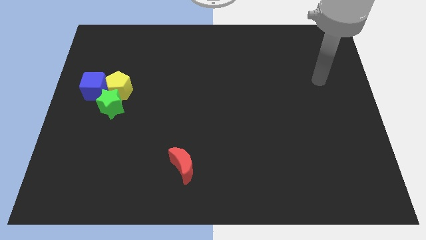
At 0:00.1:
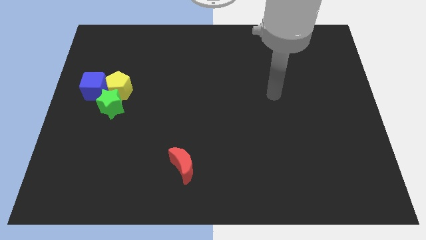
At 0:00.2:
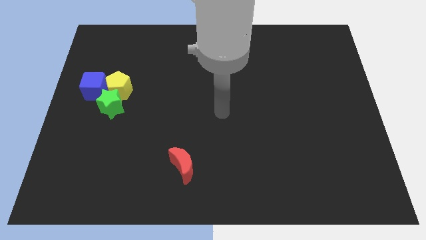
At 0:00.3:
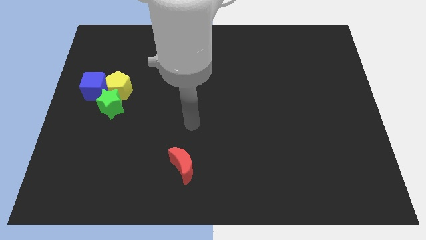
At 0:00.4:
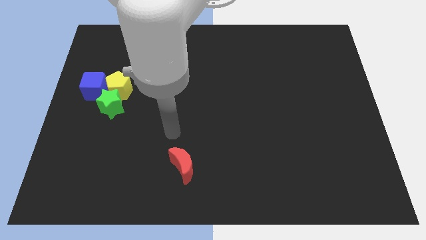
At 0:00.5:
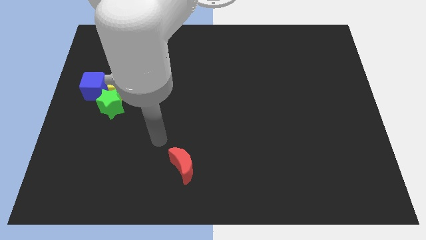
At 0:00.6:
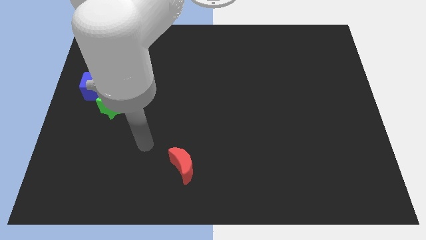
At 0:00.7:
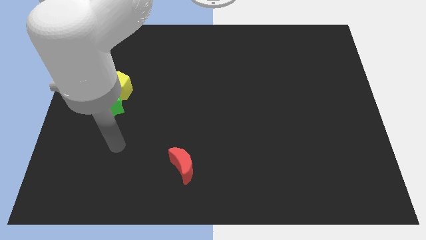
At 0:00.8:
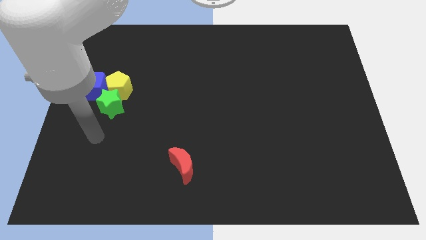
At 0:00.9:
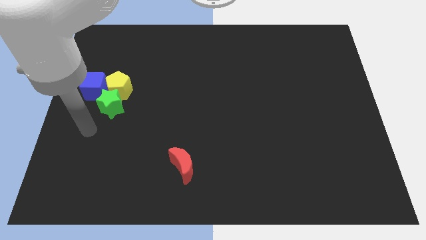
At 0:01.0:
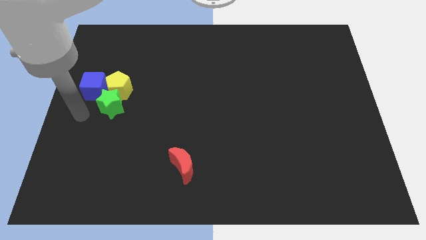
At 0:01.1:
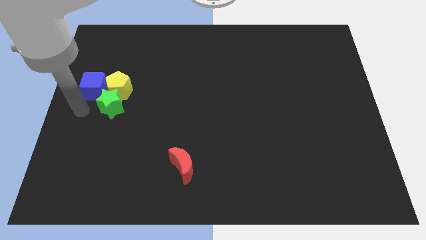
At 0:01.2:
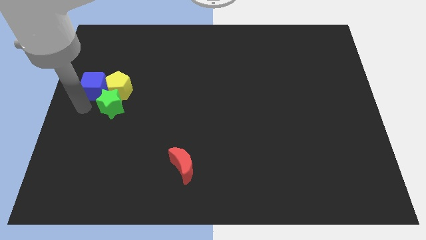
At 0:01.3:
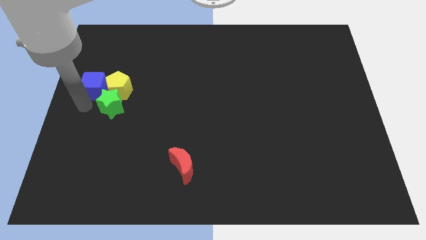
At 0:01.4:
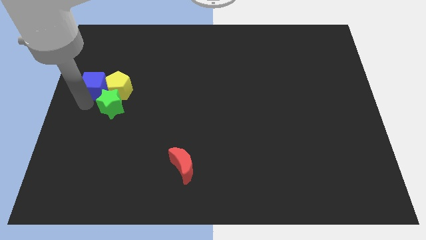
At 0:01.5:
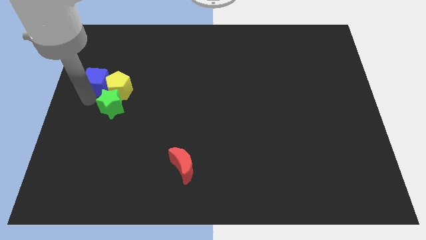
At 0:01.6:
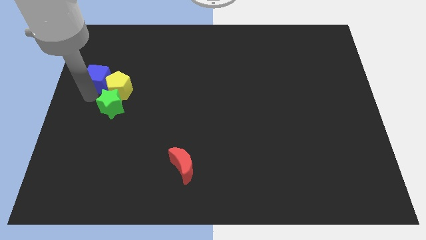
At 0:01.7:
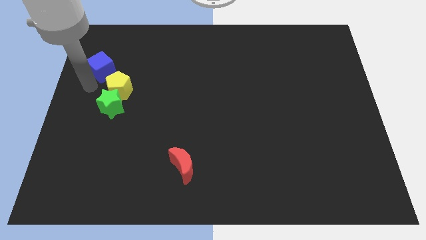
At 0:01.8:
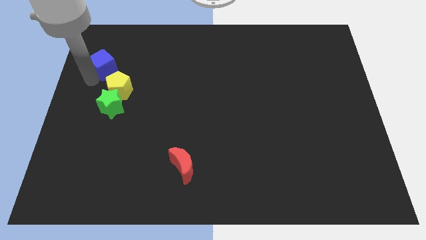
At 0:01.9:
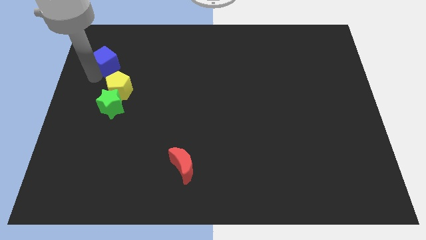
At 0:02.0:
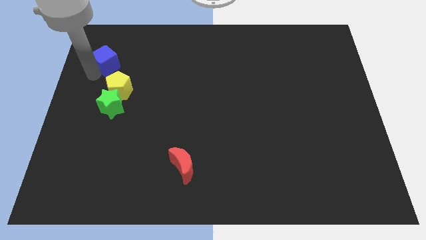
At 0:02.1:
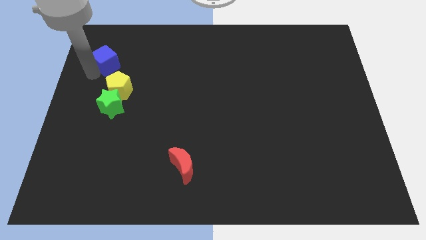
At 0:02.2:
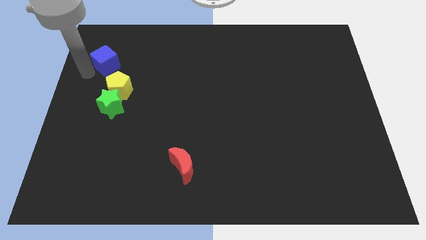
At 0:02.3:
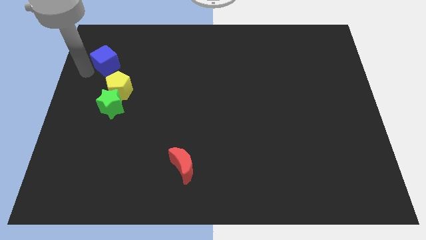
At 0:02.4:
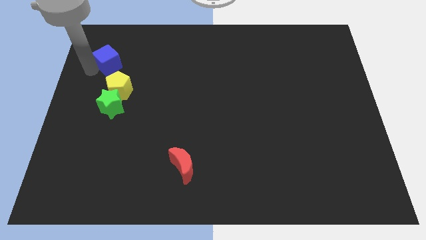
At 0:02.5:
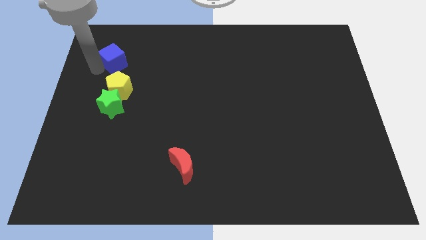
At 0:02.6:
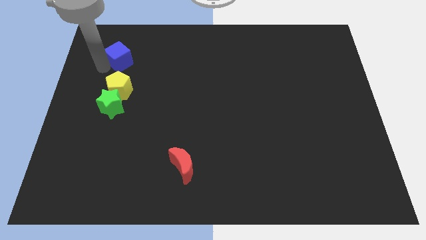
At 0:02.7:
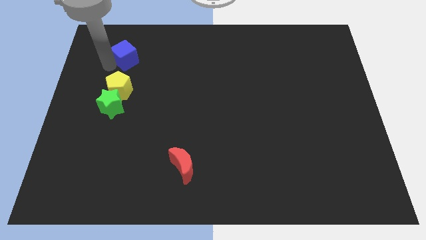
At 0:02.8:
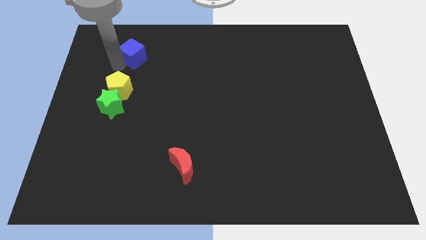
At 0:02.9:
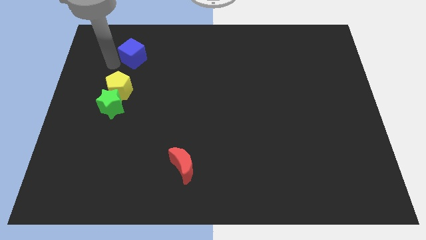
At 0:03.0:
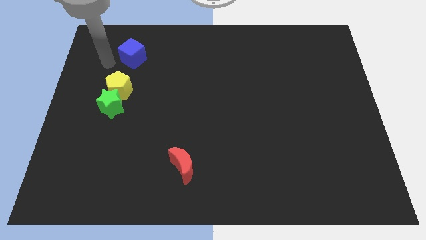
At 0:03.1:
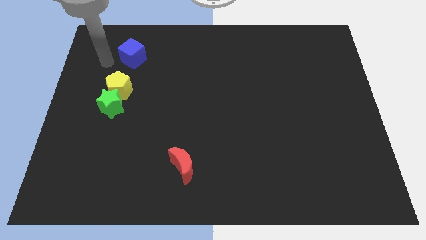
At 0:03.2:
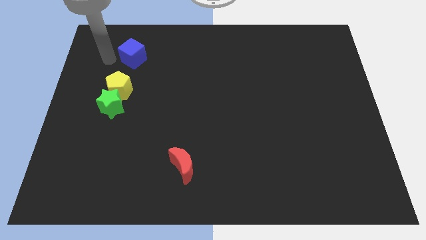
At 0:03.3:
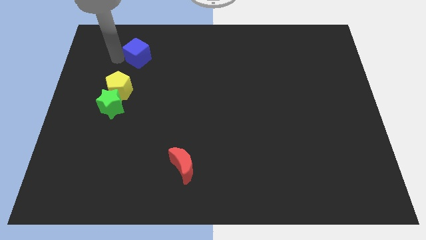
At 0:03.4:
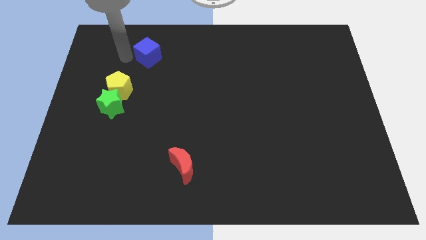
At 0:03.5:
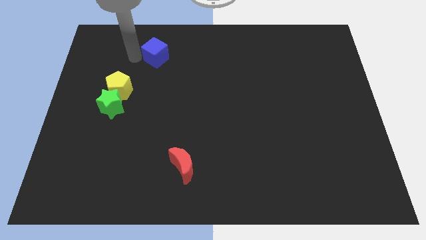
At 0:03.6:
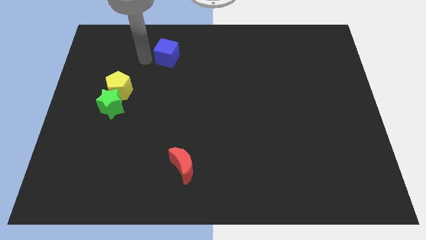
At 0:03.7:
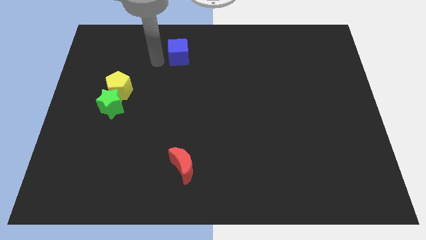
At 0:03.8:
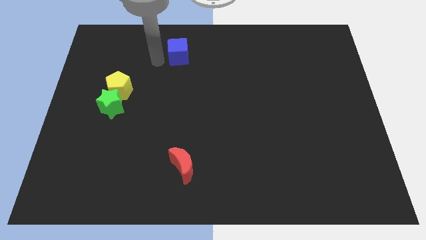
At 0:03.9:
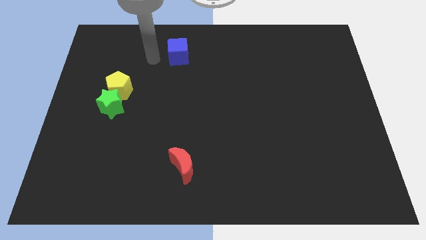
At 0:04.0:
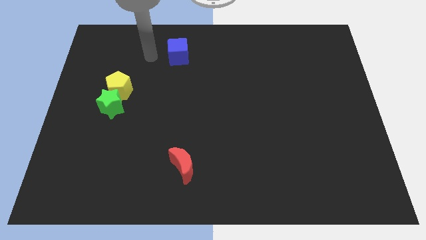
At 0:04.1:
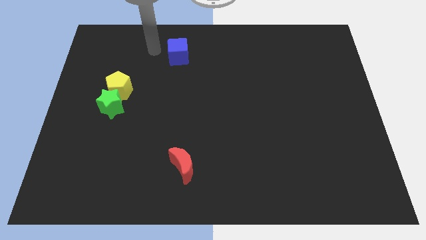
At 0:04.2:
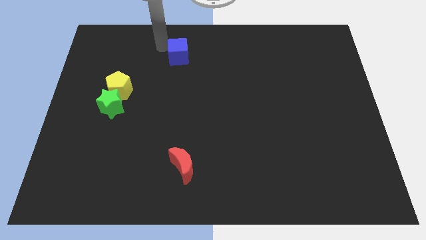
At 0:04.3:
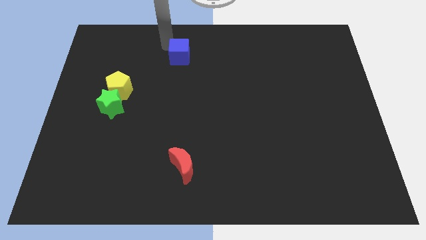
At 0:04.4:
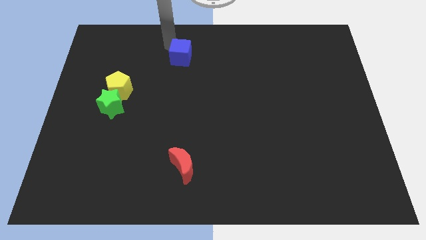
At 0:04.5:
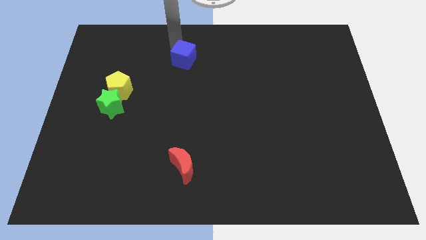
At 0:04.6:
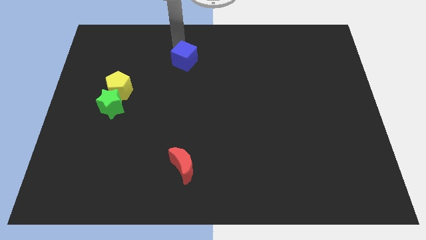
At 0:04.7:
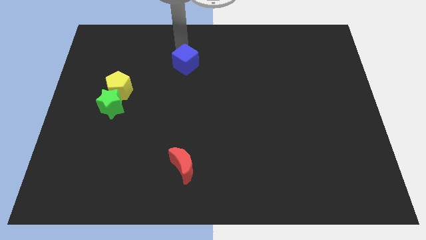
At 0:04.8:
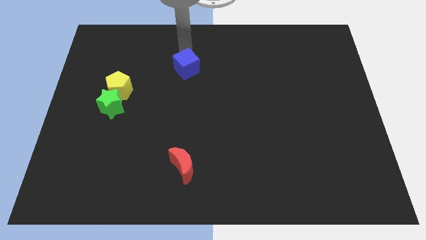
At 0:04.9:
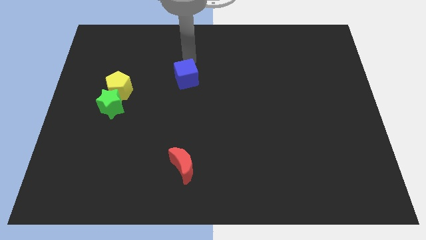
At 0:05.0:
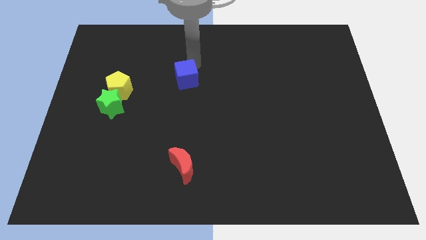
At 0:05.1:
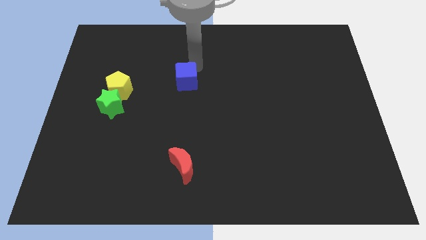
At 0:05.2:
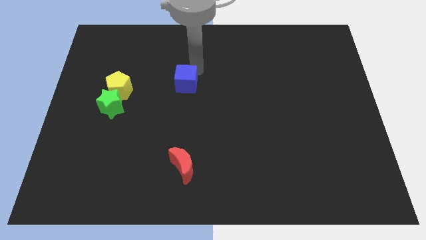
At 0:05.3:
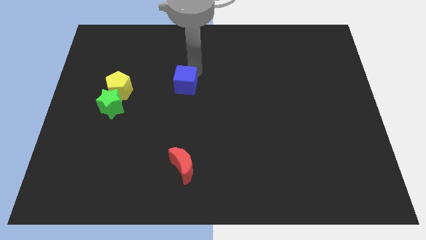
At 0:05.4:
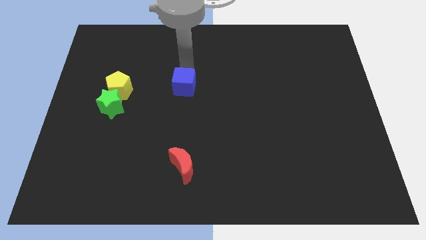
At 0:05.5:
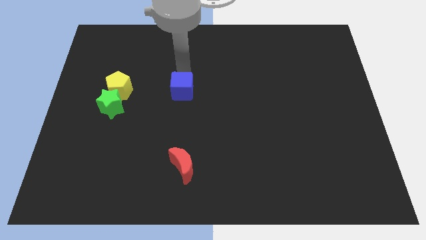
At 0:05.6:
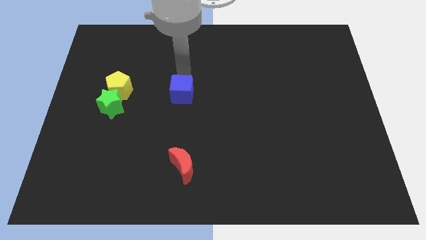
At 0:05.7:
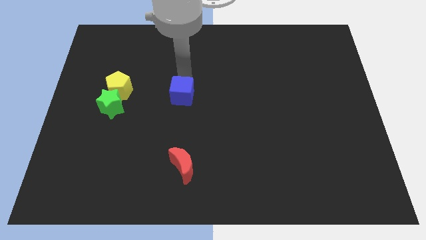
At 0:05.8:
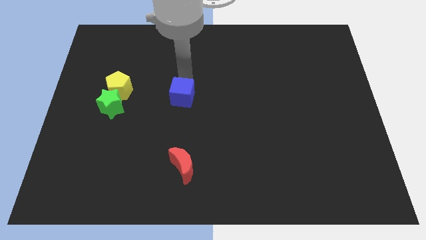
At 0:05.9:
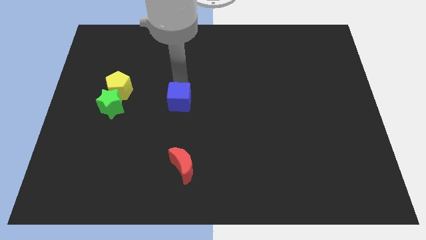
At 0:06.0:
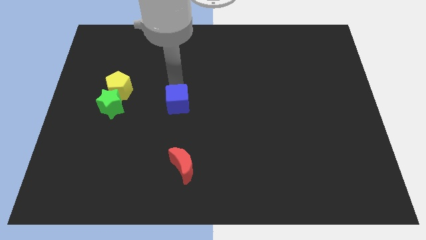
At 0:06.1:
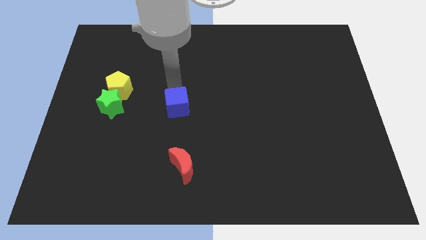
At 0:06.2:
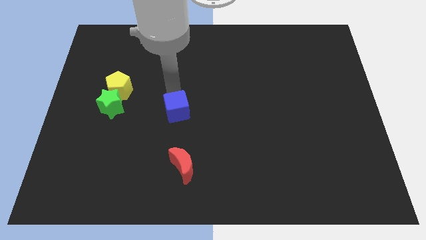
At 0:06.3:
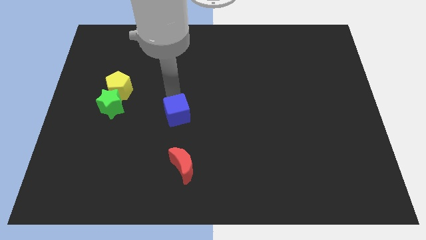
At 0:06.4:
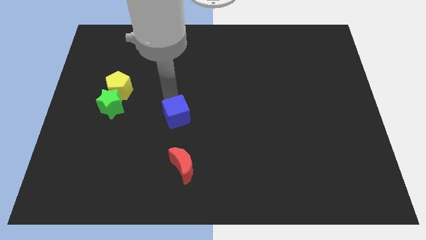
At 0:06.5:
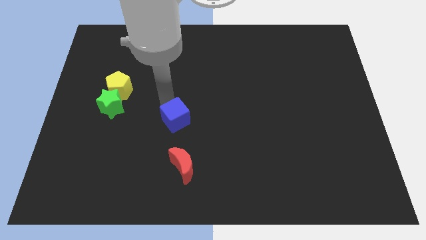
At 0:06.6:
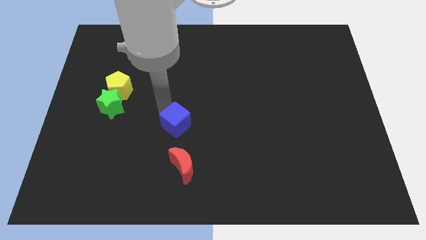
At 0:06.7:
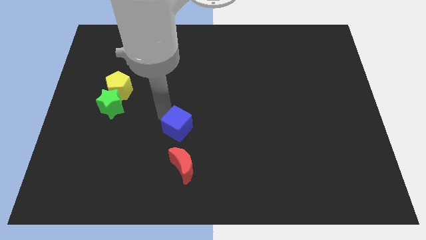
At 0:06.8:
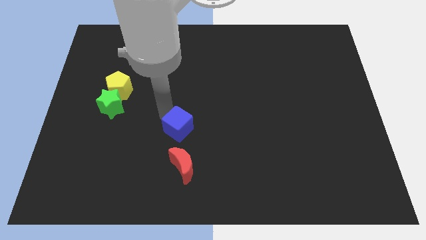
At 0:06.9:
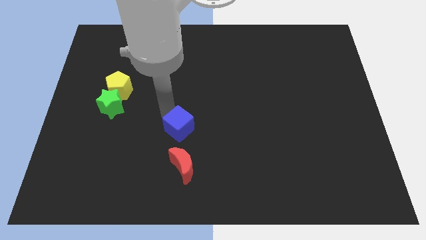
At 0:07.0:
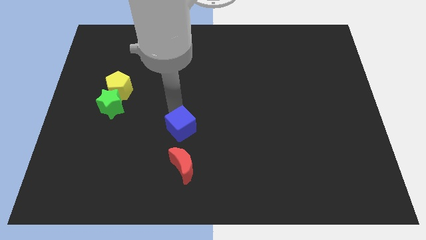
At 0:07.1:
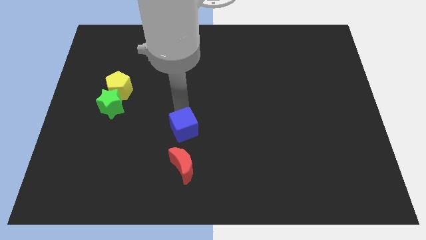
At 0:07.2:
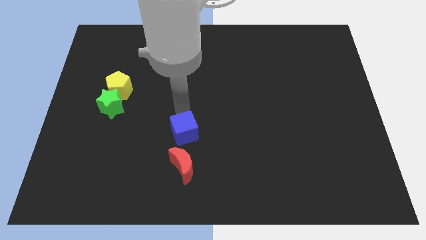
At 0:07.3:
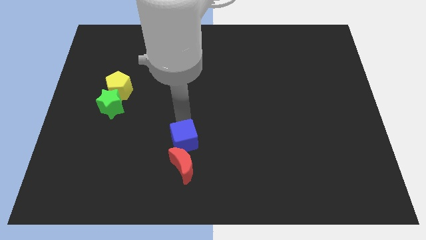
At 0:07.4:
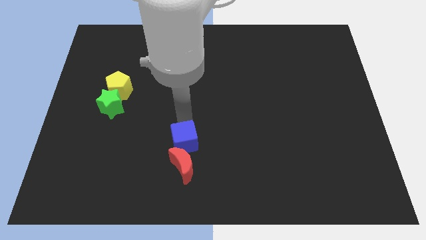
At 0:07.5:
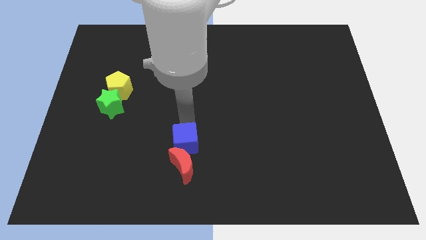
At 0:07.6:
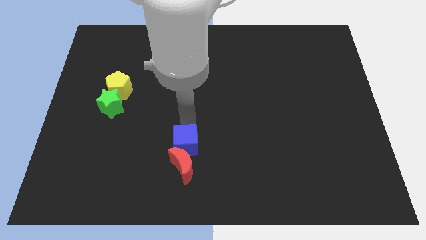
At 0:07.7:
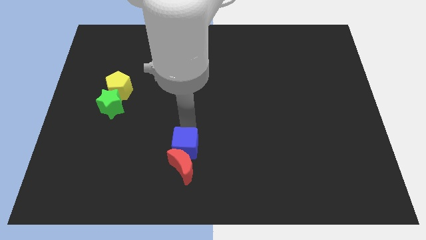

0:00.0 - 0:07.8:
put the blue block to the moon

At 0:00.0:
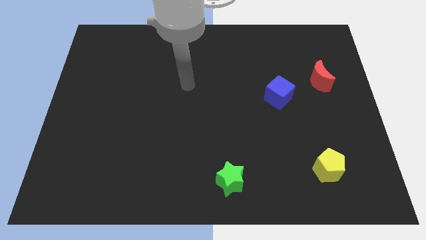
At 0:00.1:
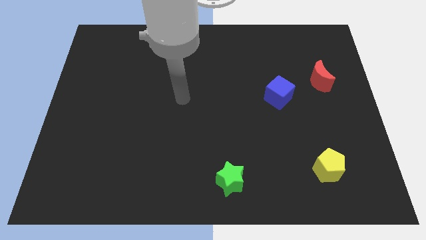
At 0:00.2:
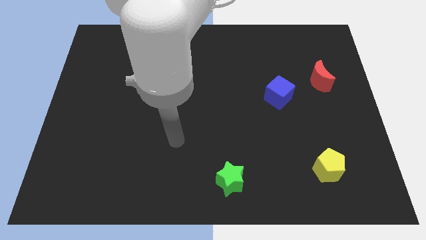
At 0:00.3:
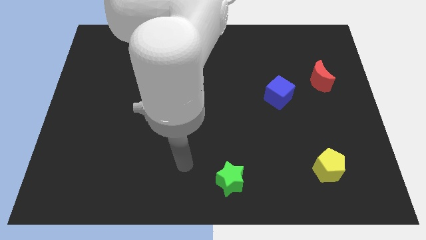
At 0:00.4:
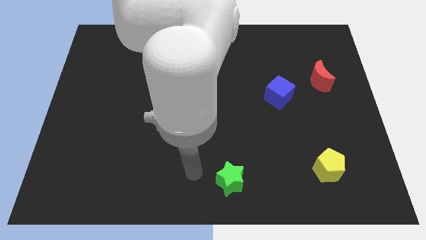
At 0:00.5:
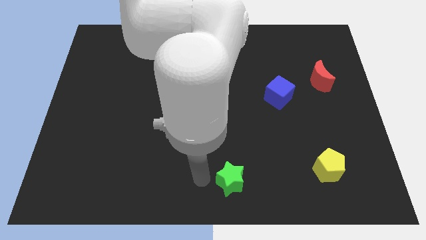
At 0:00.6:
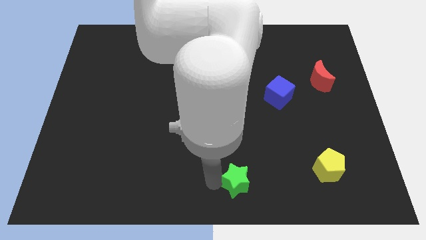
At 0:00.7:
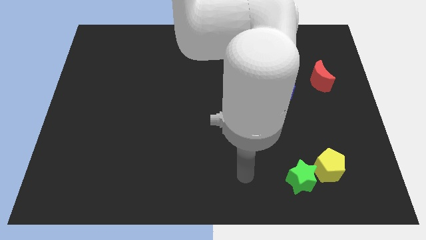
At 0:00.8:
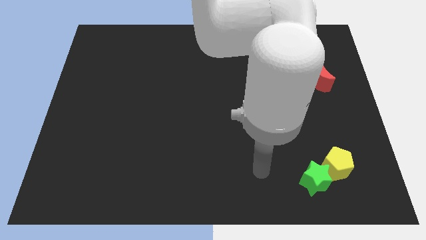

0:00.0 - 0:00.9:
move the green block close to the yellow pentagon
